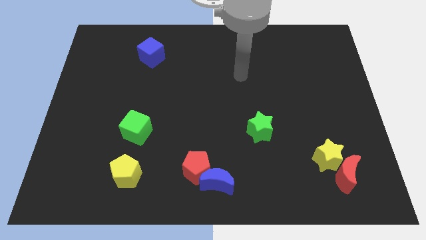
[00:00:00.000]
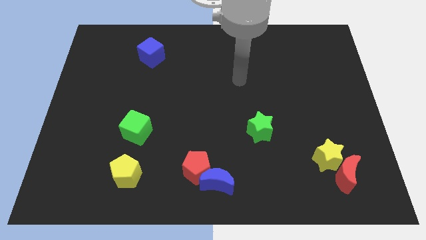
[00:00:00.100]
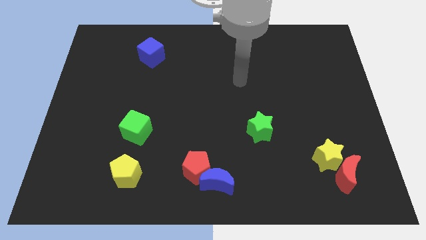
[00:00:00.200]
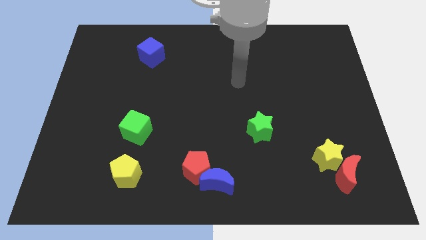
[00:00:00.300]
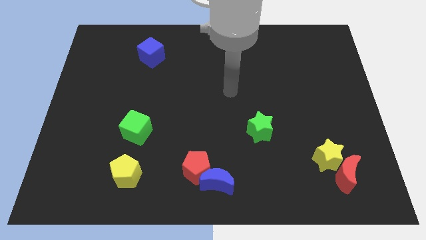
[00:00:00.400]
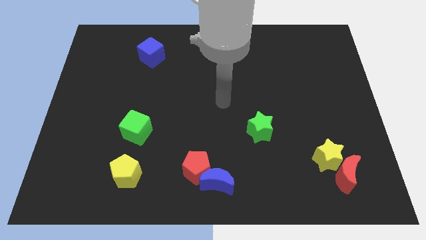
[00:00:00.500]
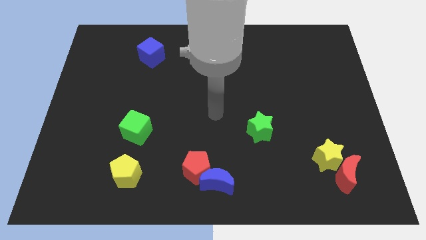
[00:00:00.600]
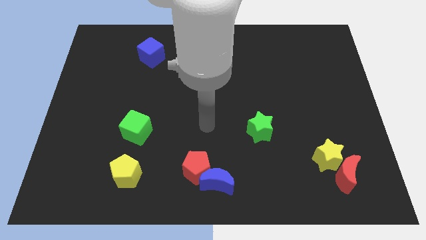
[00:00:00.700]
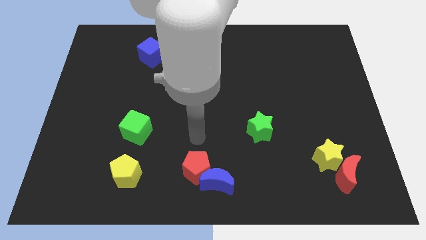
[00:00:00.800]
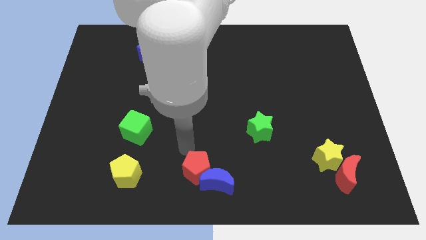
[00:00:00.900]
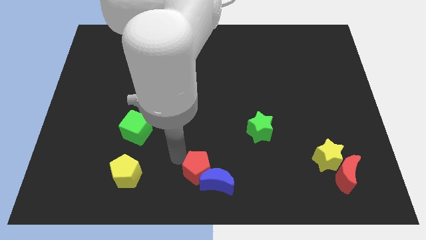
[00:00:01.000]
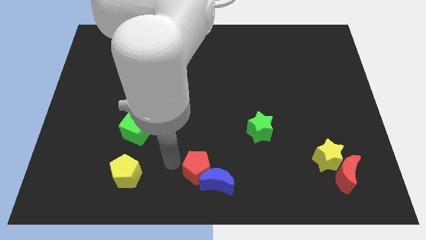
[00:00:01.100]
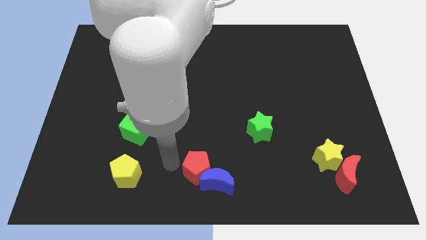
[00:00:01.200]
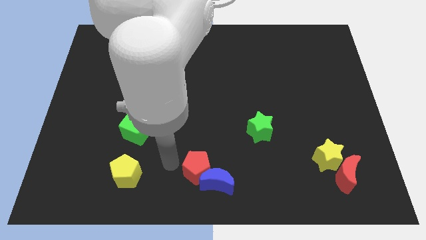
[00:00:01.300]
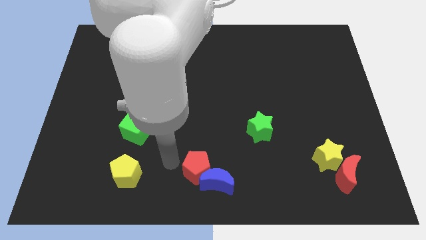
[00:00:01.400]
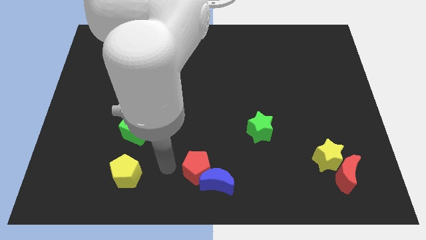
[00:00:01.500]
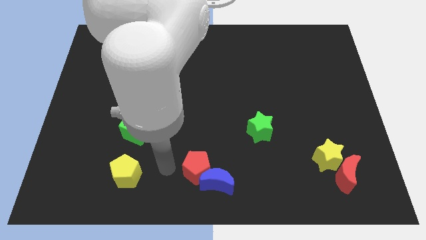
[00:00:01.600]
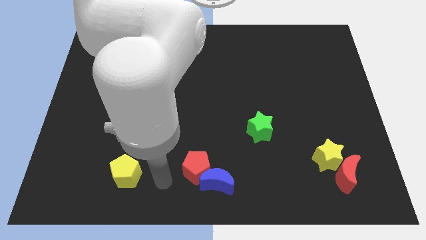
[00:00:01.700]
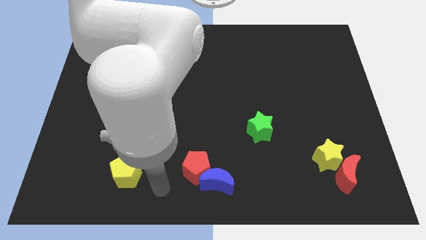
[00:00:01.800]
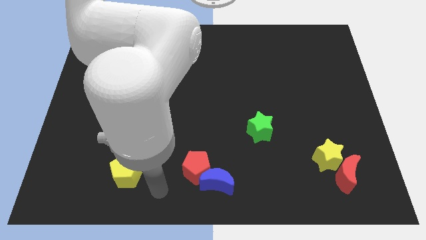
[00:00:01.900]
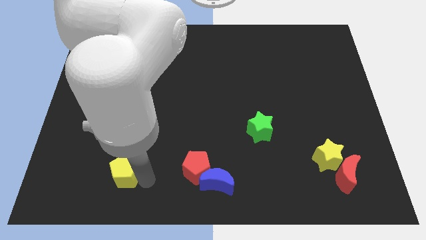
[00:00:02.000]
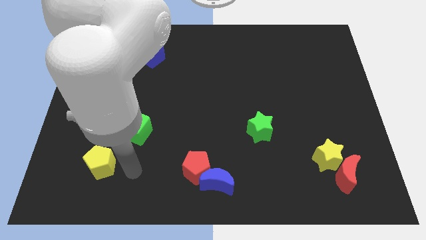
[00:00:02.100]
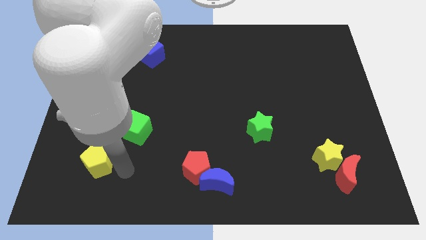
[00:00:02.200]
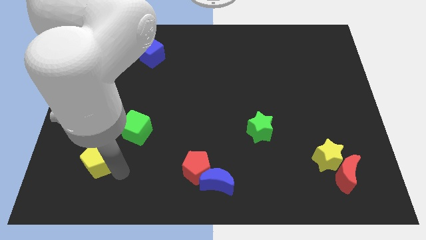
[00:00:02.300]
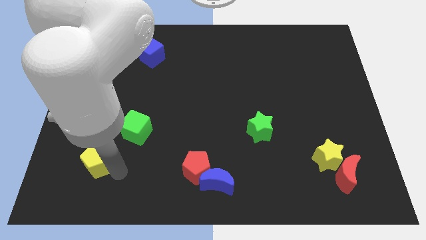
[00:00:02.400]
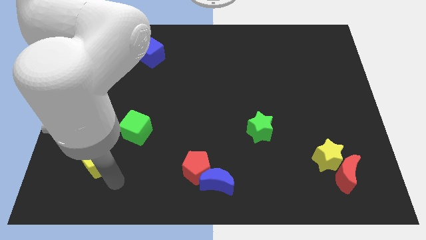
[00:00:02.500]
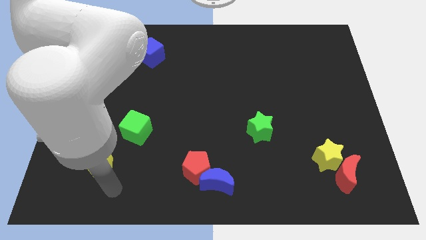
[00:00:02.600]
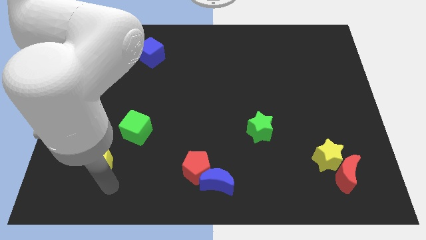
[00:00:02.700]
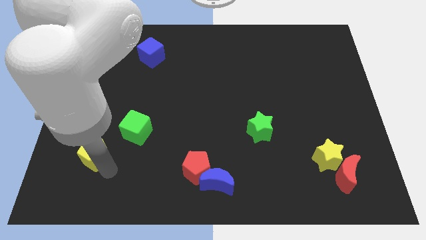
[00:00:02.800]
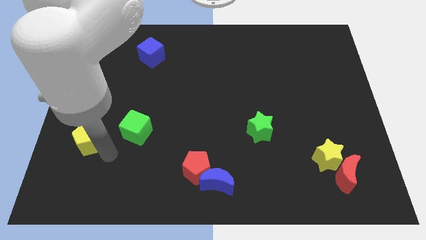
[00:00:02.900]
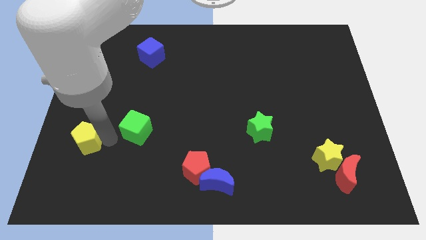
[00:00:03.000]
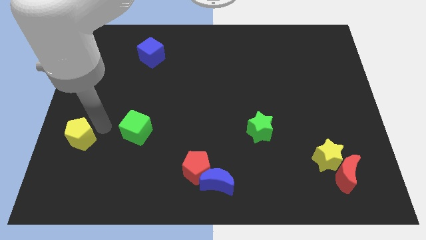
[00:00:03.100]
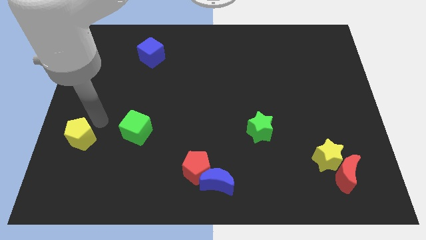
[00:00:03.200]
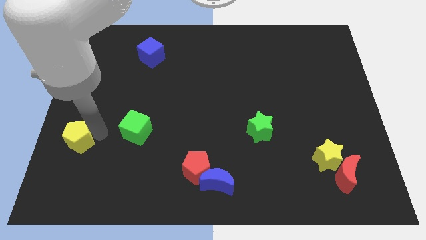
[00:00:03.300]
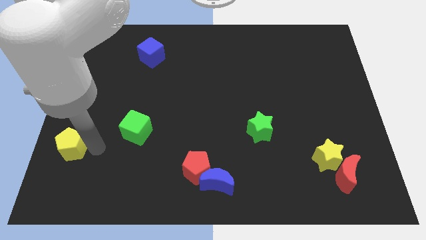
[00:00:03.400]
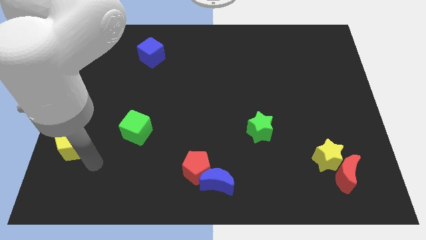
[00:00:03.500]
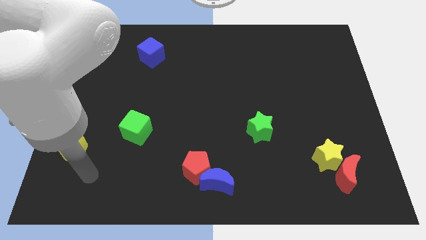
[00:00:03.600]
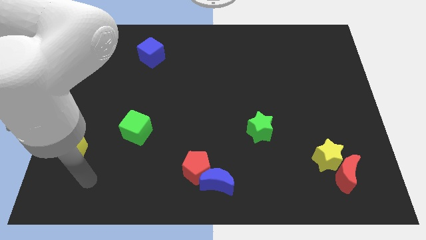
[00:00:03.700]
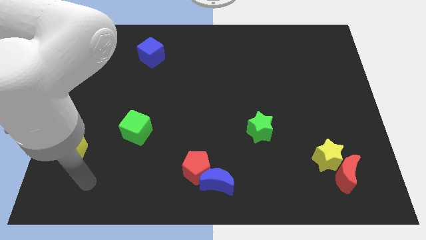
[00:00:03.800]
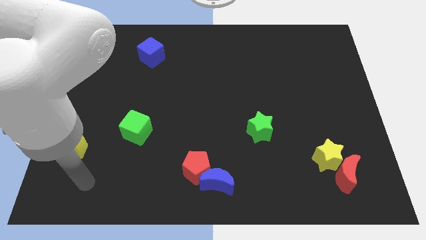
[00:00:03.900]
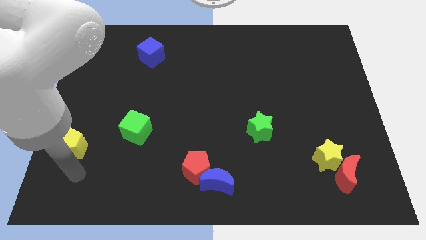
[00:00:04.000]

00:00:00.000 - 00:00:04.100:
slide yellow pentagon to bottom left of green cube

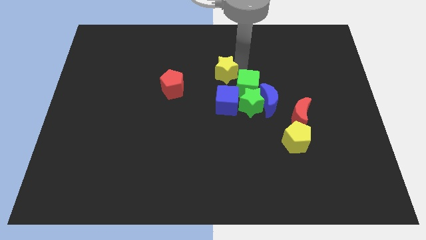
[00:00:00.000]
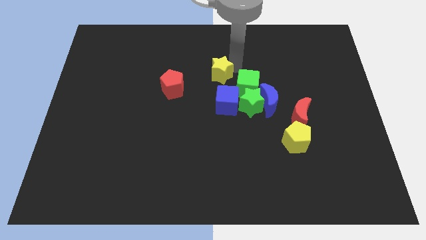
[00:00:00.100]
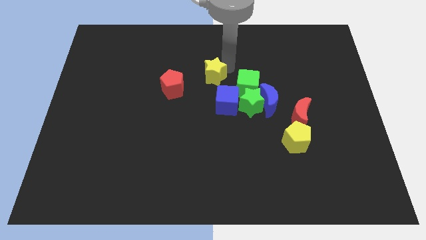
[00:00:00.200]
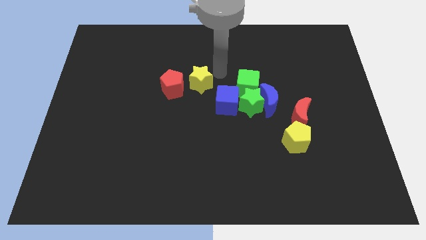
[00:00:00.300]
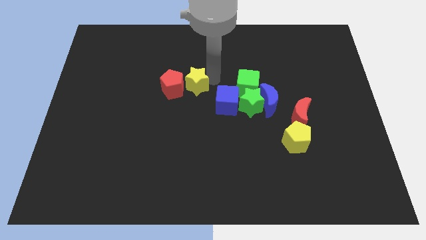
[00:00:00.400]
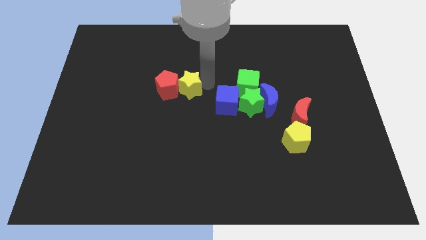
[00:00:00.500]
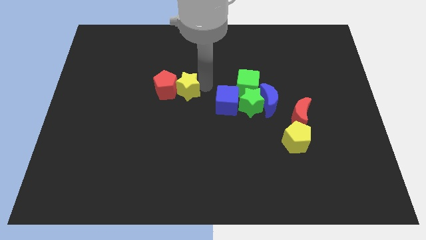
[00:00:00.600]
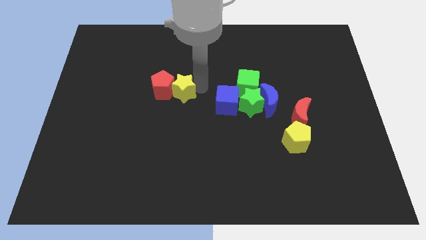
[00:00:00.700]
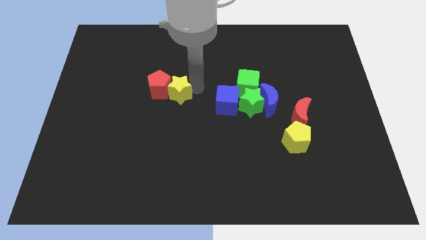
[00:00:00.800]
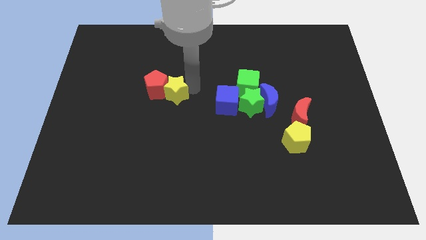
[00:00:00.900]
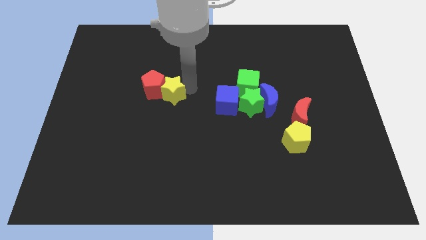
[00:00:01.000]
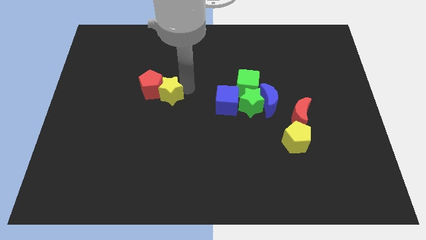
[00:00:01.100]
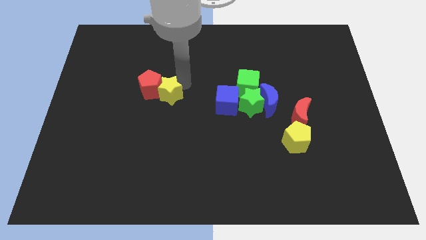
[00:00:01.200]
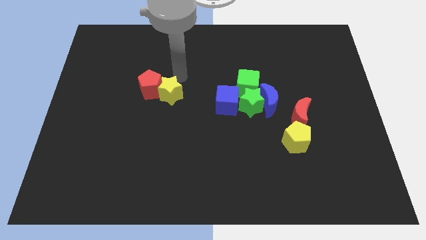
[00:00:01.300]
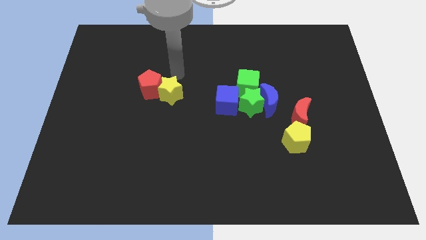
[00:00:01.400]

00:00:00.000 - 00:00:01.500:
move the yellow star into the red pentagon

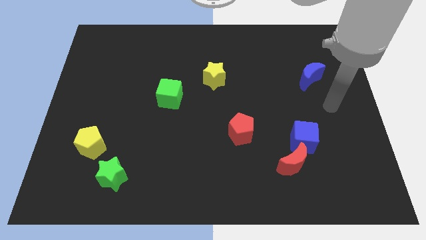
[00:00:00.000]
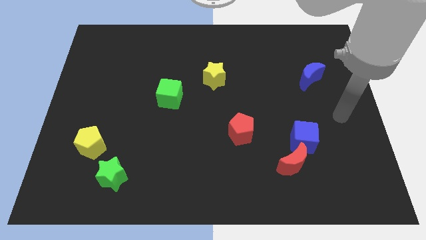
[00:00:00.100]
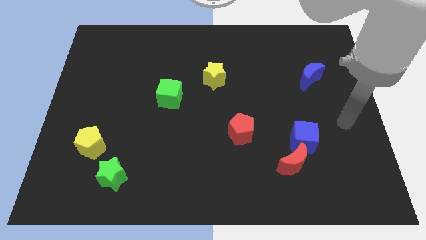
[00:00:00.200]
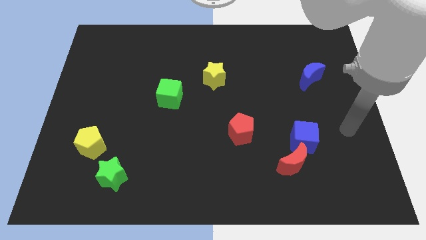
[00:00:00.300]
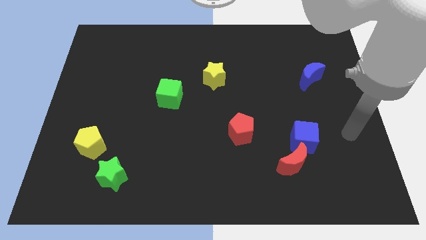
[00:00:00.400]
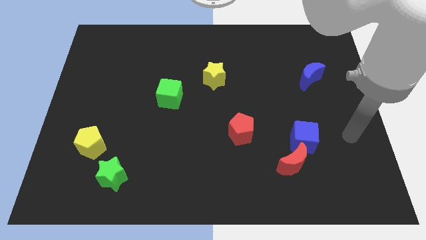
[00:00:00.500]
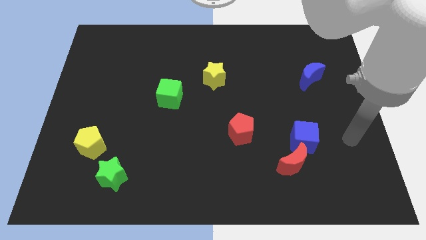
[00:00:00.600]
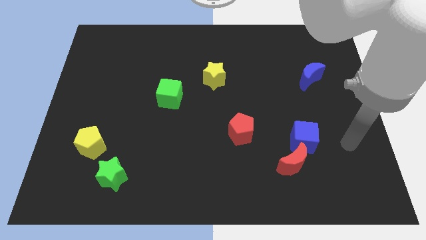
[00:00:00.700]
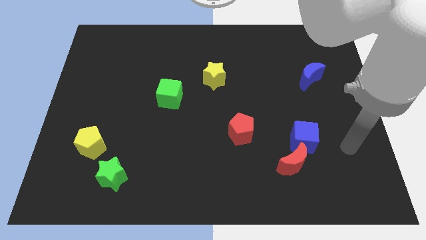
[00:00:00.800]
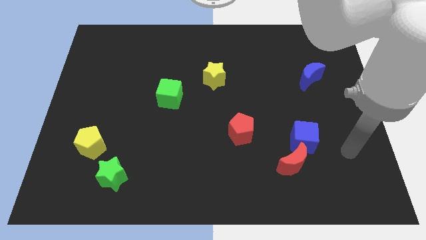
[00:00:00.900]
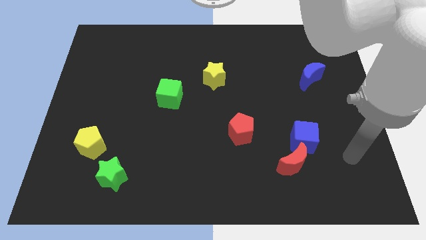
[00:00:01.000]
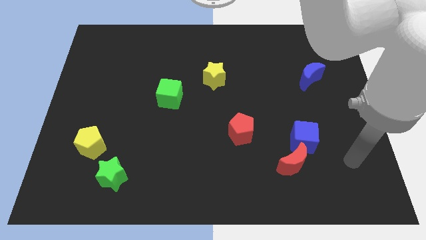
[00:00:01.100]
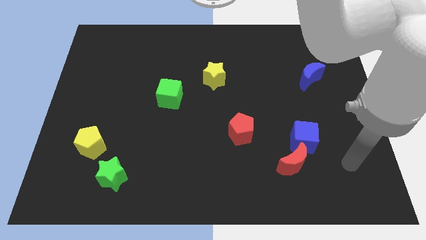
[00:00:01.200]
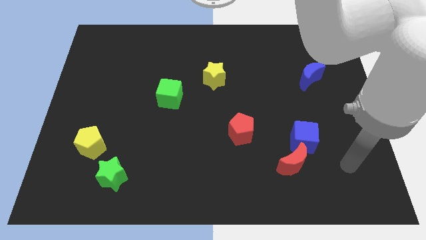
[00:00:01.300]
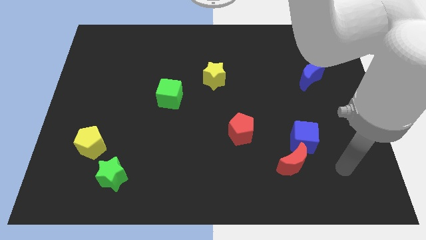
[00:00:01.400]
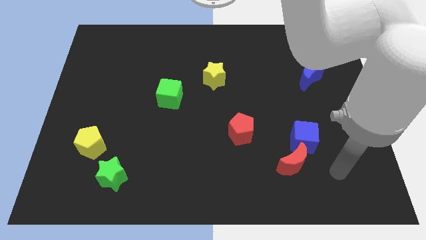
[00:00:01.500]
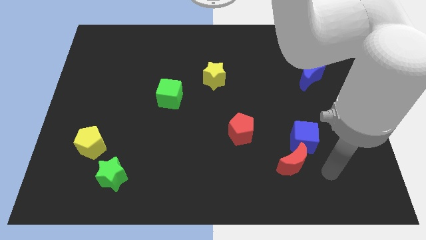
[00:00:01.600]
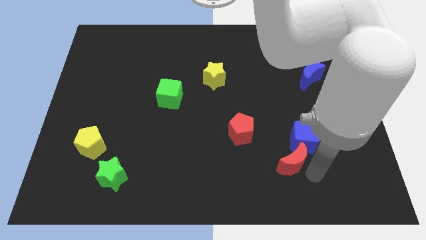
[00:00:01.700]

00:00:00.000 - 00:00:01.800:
move your arm to the right of the red crescent

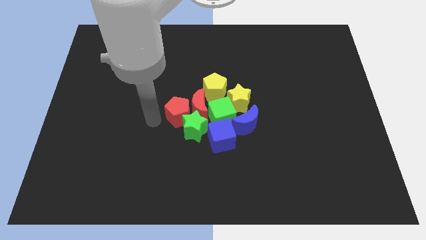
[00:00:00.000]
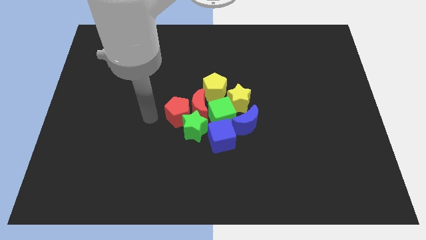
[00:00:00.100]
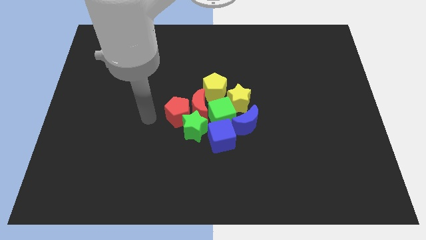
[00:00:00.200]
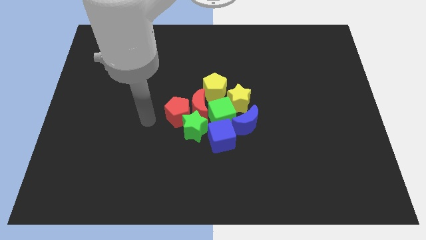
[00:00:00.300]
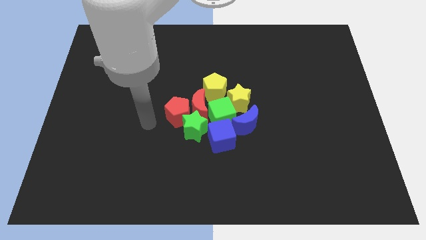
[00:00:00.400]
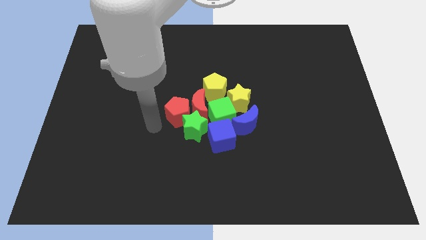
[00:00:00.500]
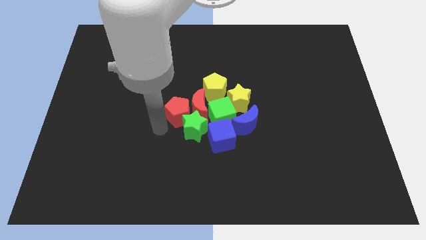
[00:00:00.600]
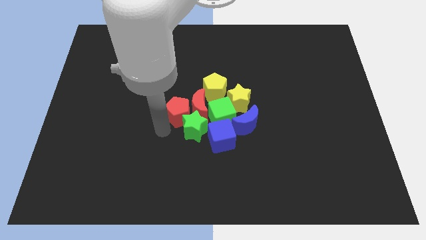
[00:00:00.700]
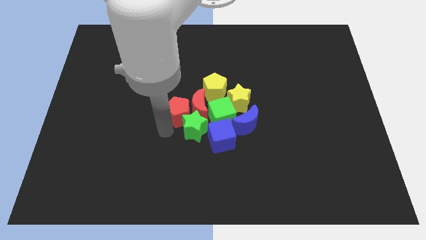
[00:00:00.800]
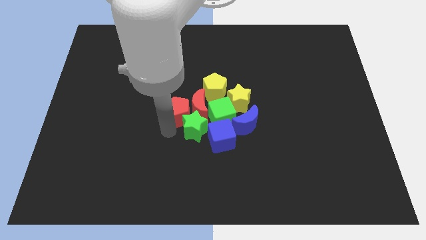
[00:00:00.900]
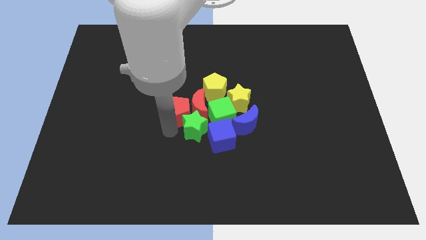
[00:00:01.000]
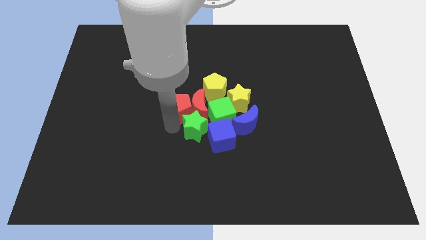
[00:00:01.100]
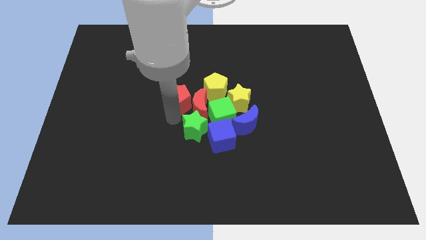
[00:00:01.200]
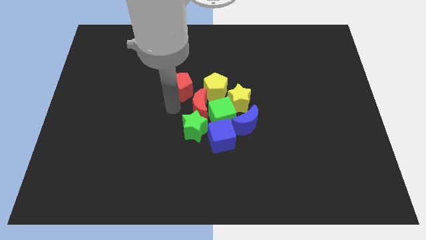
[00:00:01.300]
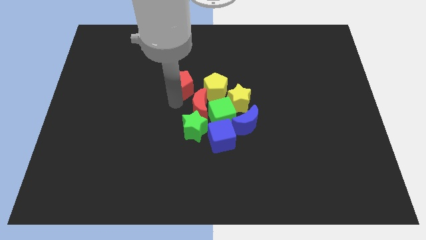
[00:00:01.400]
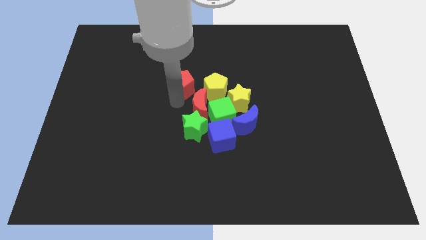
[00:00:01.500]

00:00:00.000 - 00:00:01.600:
slide the red pentagon at the top left of the red moon
